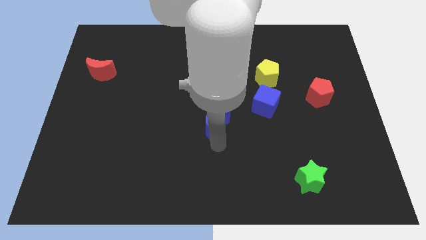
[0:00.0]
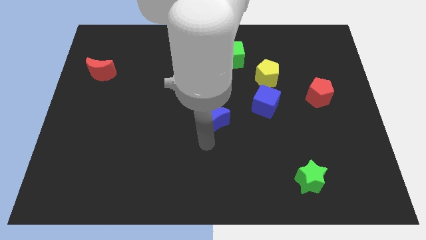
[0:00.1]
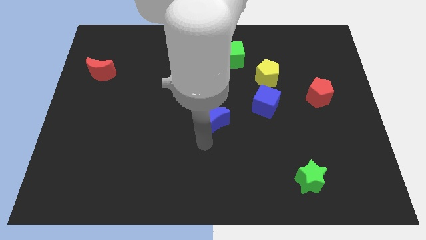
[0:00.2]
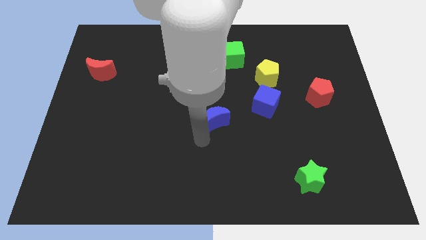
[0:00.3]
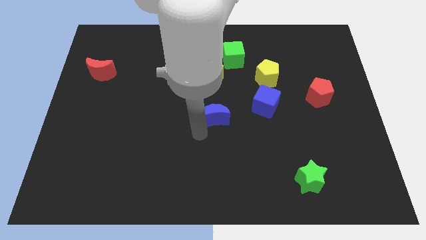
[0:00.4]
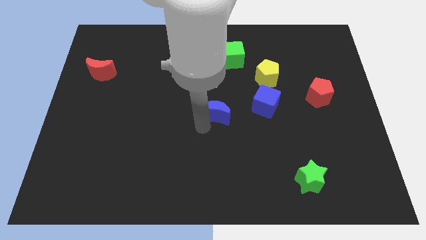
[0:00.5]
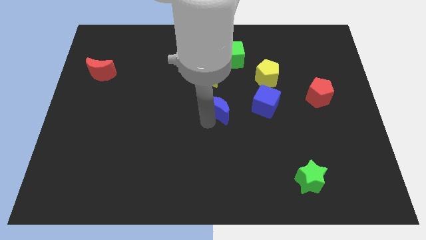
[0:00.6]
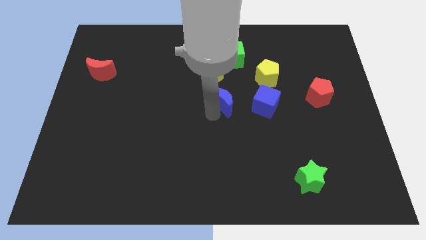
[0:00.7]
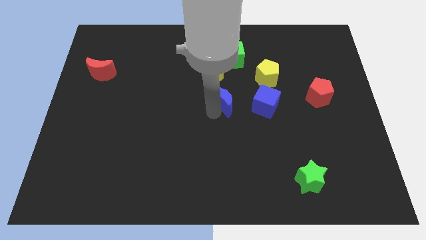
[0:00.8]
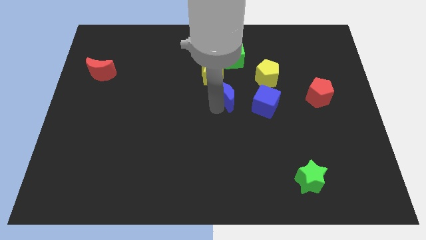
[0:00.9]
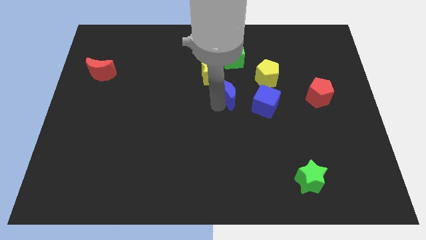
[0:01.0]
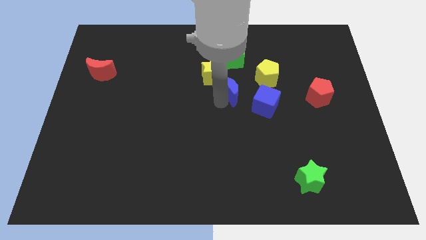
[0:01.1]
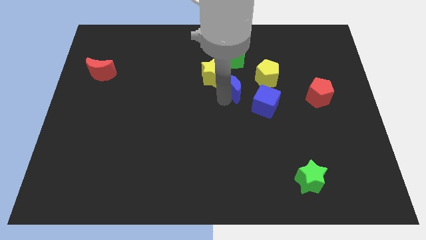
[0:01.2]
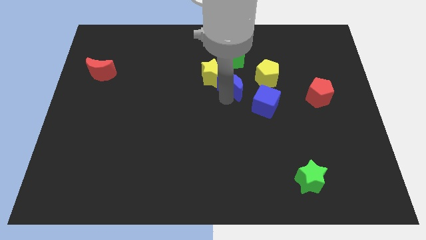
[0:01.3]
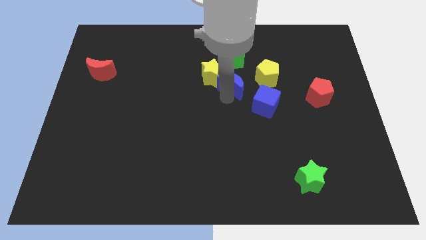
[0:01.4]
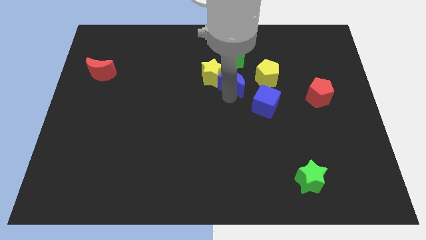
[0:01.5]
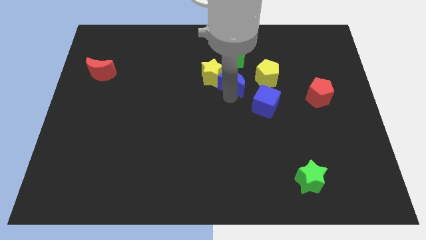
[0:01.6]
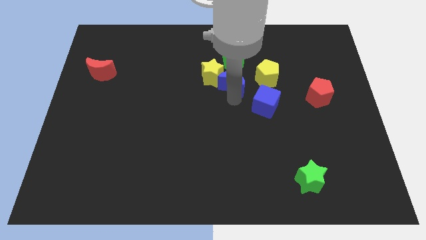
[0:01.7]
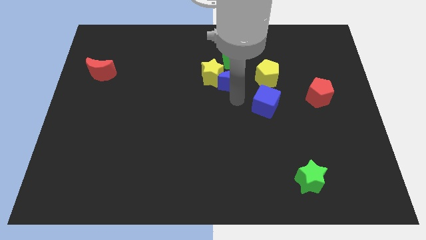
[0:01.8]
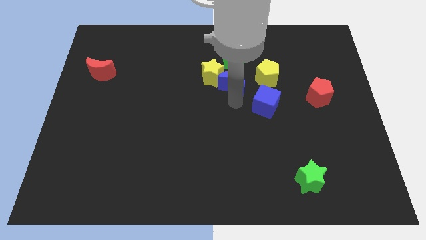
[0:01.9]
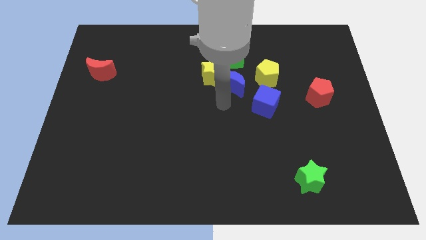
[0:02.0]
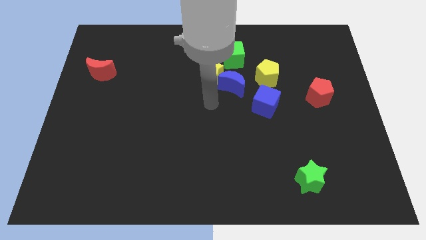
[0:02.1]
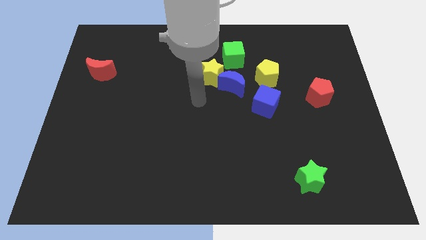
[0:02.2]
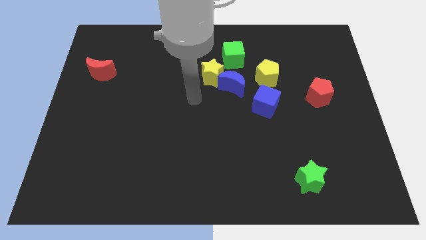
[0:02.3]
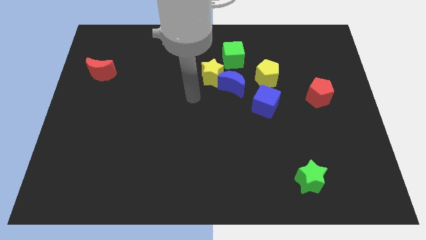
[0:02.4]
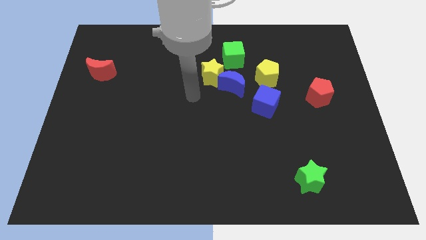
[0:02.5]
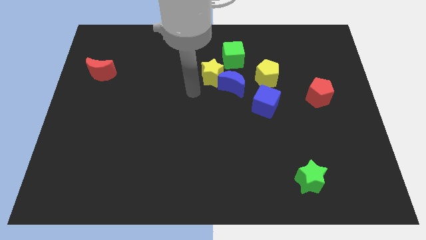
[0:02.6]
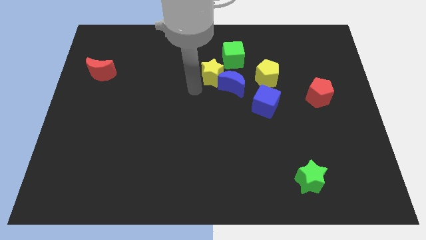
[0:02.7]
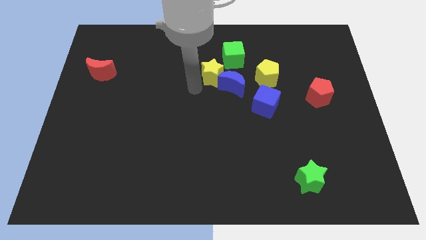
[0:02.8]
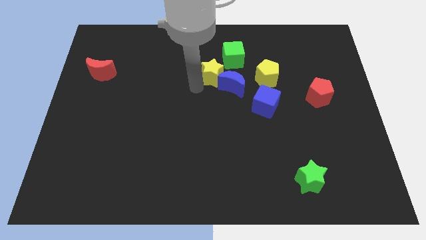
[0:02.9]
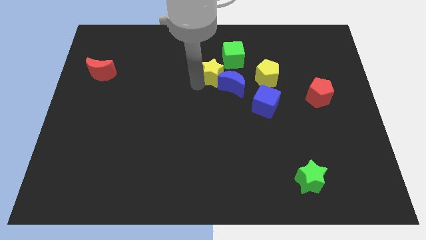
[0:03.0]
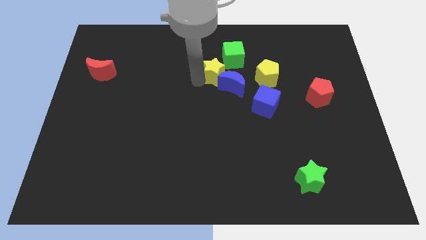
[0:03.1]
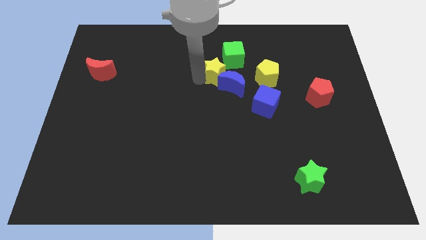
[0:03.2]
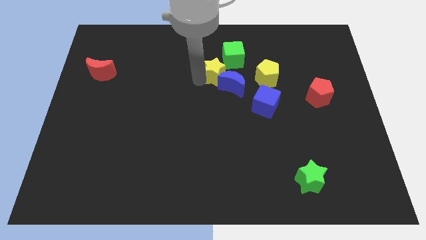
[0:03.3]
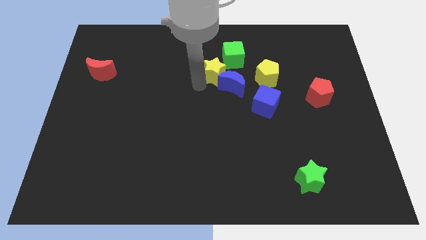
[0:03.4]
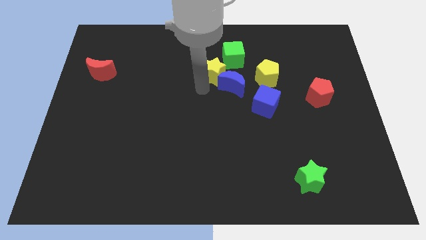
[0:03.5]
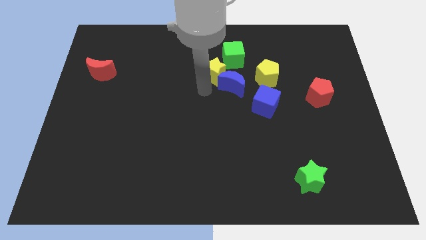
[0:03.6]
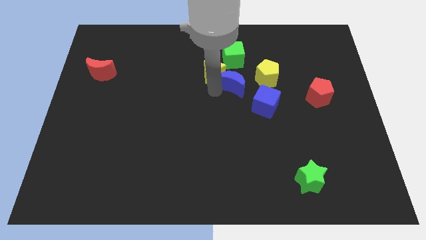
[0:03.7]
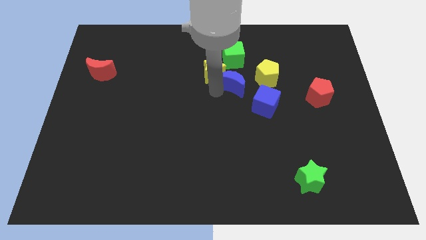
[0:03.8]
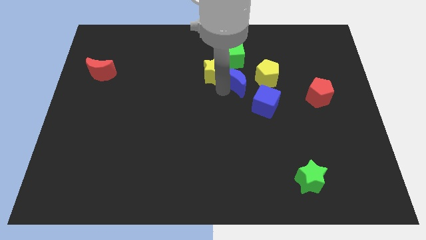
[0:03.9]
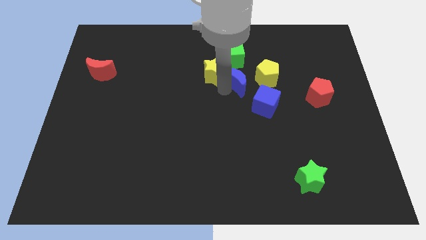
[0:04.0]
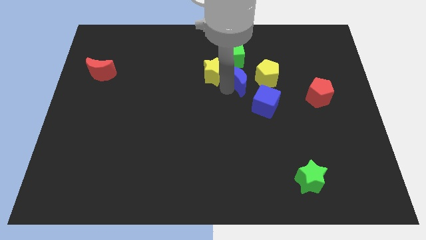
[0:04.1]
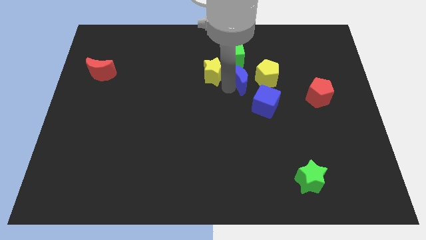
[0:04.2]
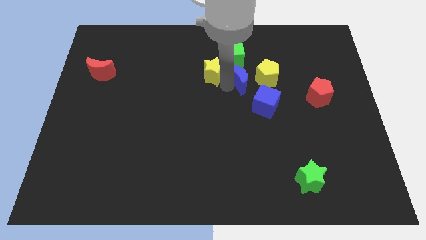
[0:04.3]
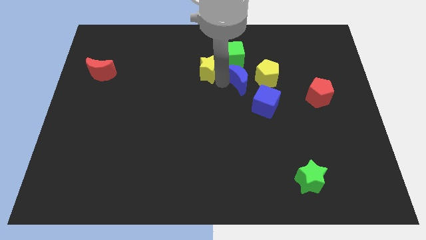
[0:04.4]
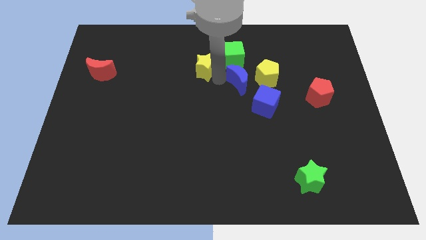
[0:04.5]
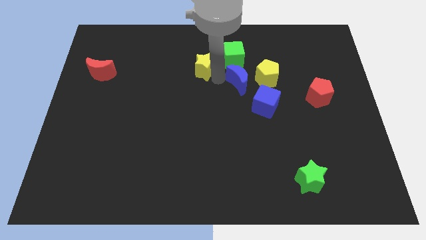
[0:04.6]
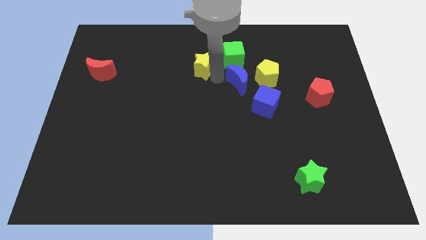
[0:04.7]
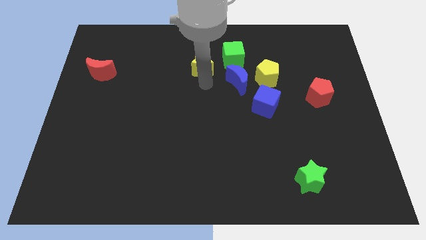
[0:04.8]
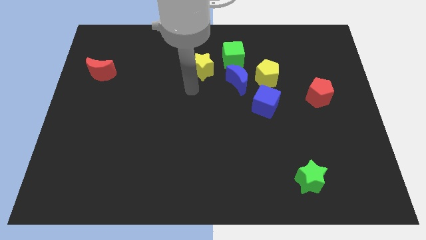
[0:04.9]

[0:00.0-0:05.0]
place the blue crescent to the left of the yellow pentagon

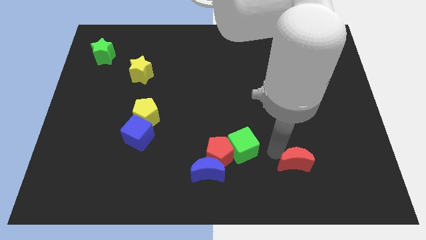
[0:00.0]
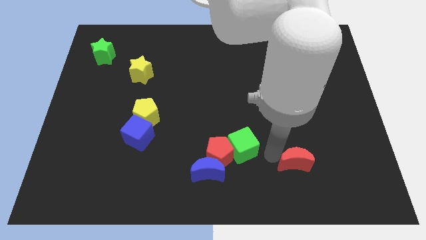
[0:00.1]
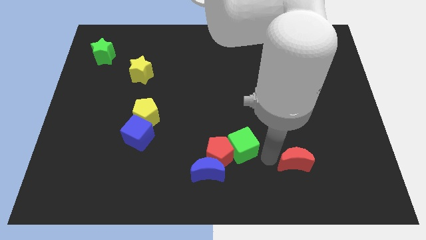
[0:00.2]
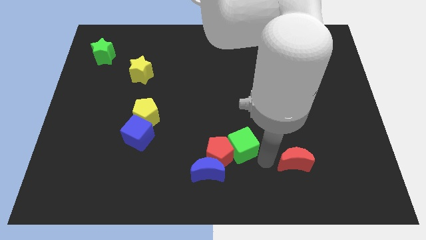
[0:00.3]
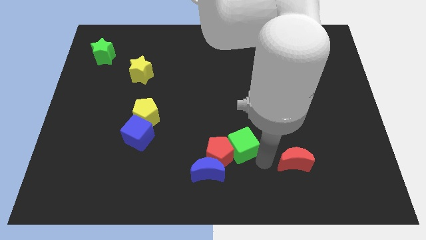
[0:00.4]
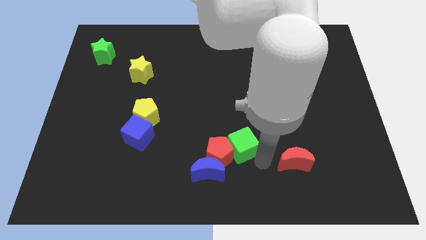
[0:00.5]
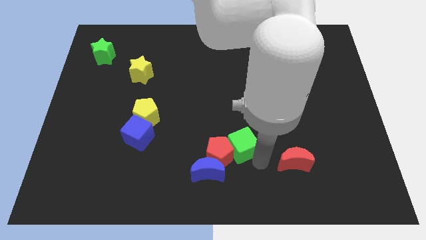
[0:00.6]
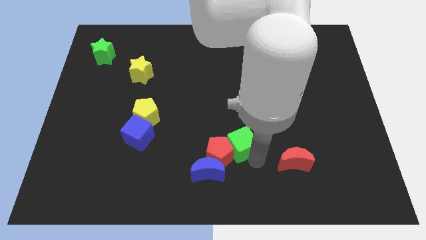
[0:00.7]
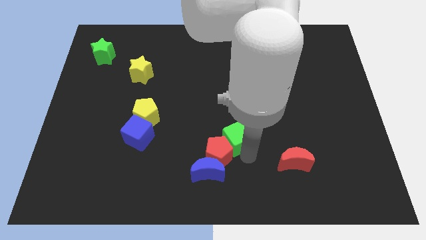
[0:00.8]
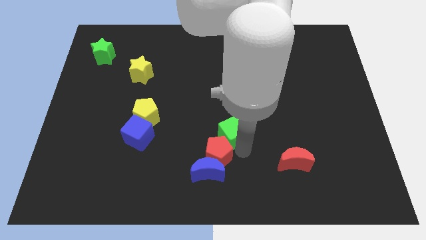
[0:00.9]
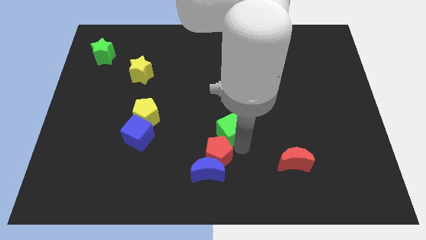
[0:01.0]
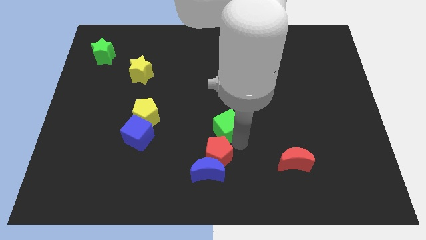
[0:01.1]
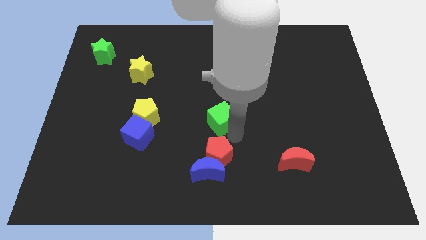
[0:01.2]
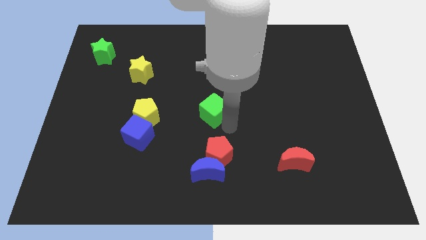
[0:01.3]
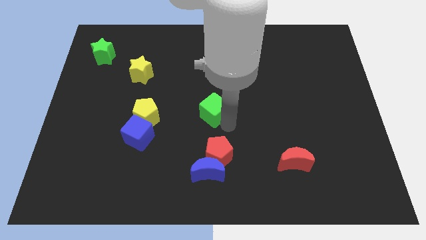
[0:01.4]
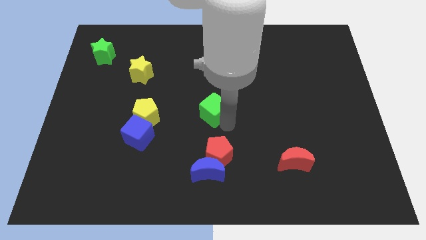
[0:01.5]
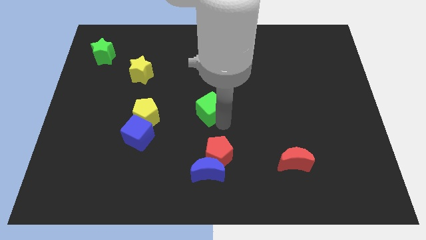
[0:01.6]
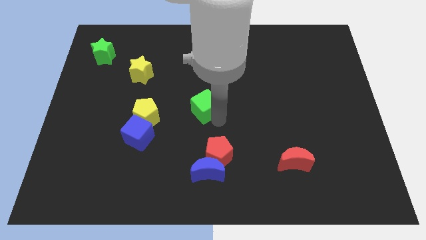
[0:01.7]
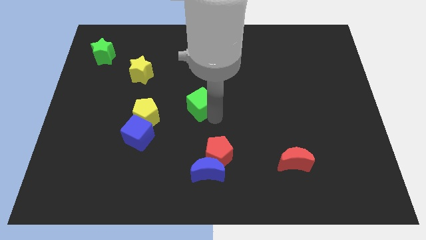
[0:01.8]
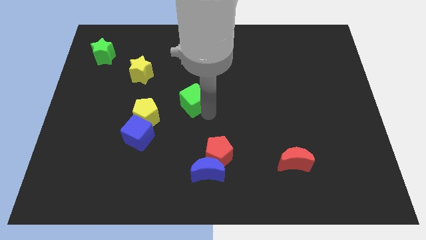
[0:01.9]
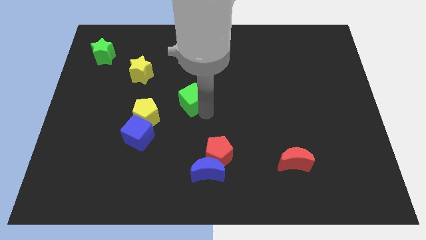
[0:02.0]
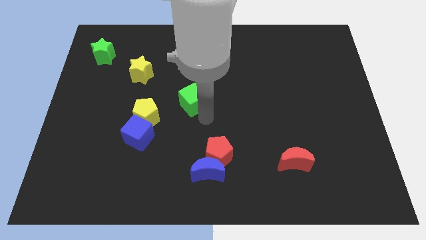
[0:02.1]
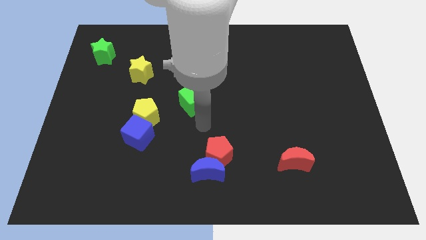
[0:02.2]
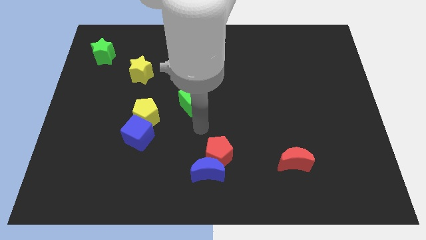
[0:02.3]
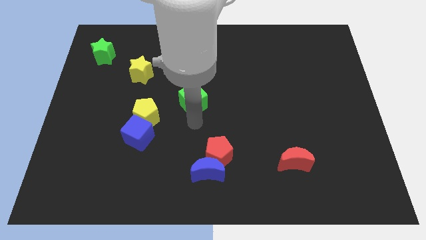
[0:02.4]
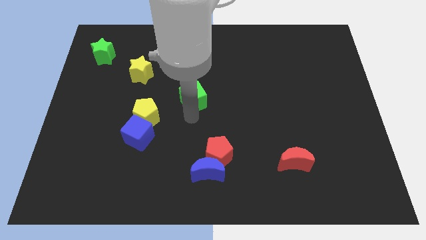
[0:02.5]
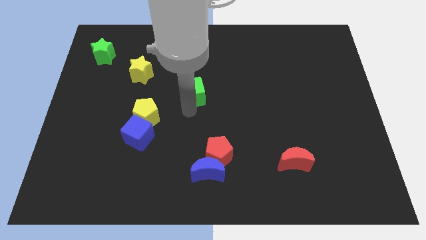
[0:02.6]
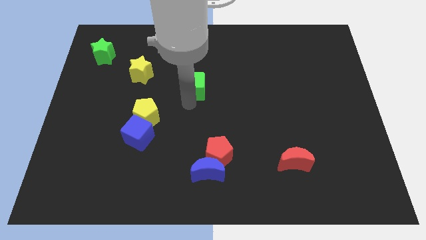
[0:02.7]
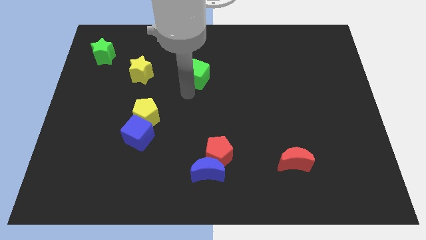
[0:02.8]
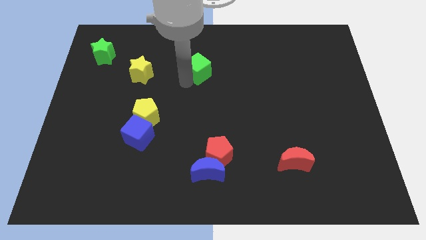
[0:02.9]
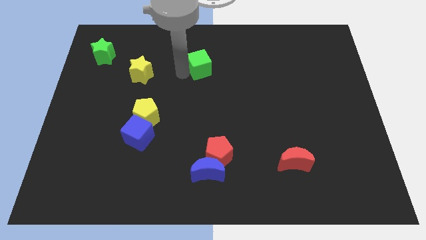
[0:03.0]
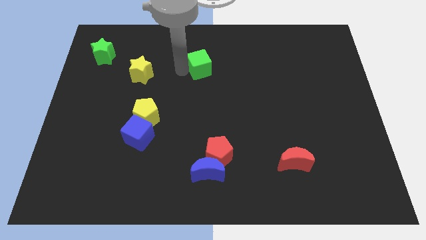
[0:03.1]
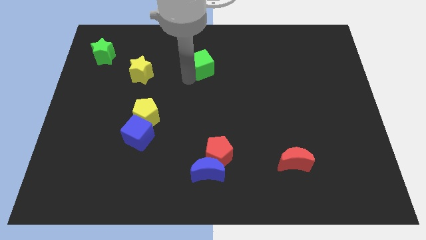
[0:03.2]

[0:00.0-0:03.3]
move green cube from red pentagon

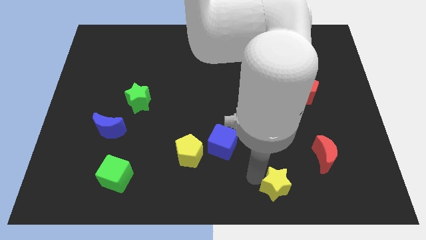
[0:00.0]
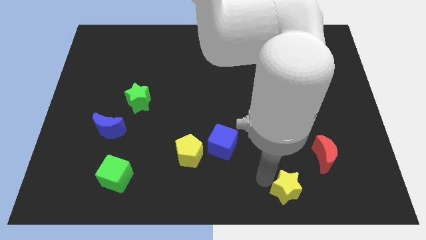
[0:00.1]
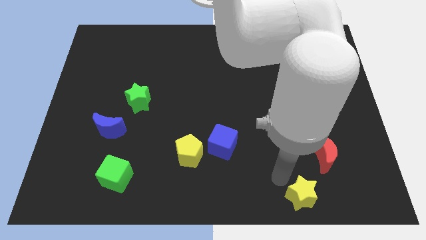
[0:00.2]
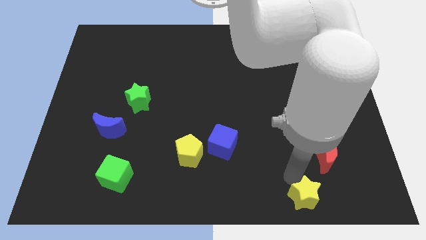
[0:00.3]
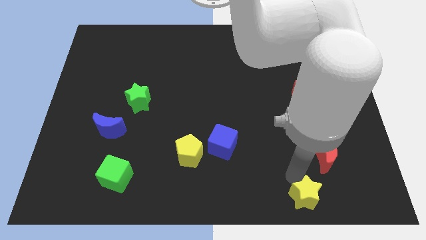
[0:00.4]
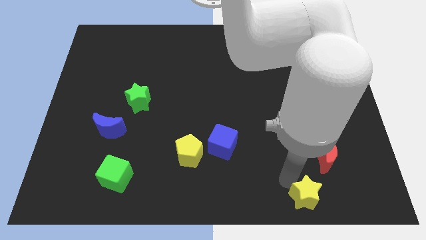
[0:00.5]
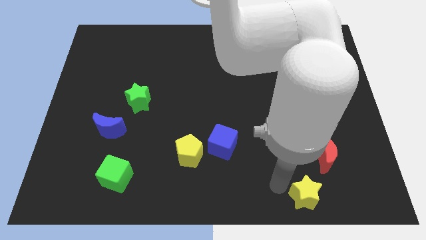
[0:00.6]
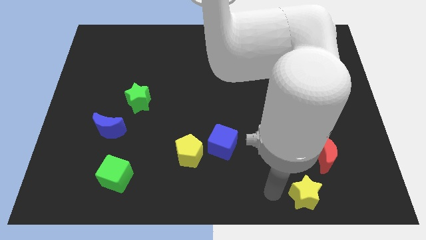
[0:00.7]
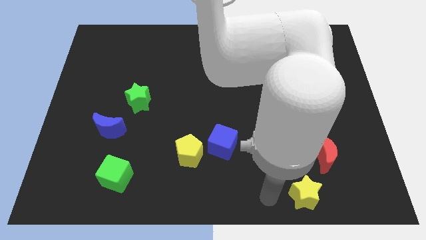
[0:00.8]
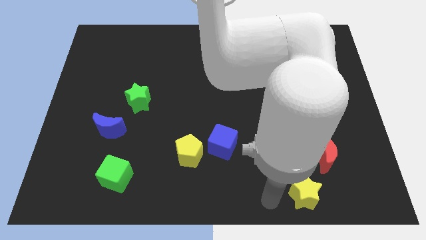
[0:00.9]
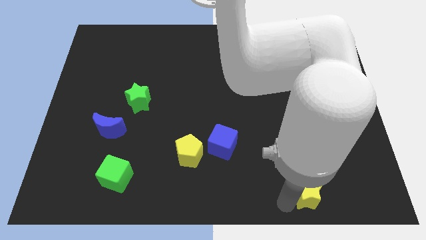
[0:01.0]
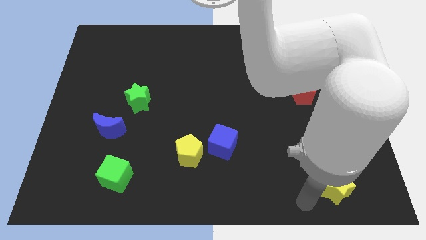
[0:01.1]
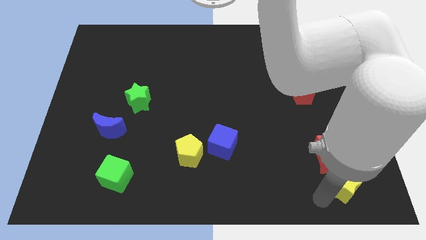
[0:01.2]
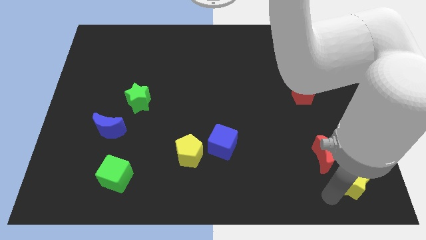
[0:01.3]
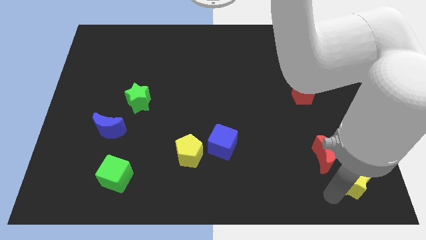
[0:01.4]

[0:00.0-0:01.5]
push the yellow star to the bottom right corner
